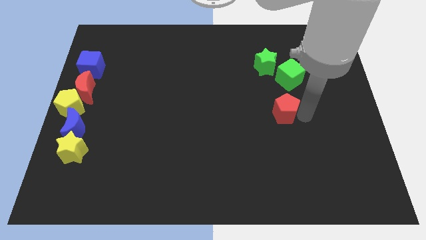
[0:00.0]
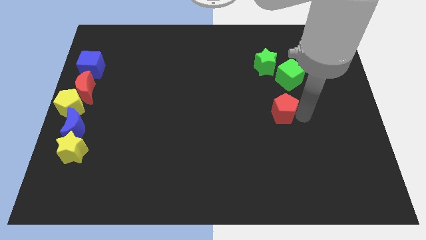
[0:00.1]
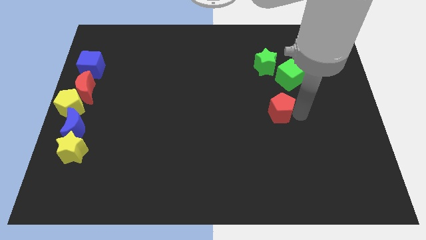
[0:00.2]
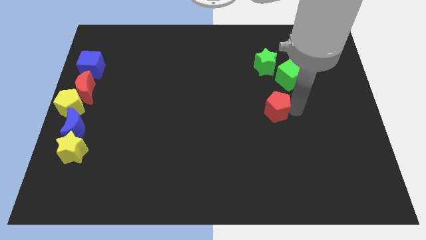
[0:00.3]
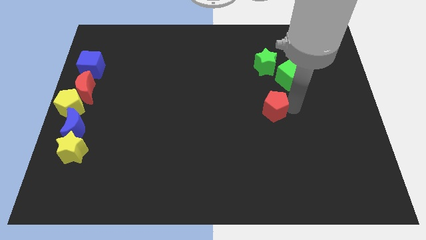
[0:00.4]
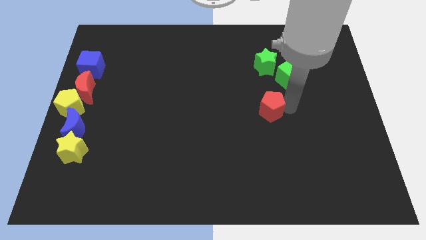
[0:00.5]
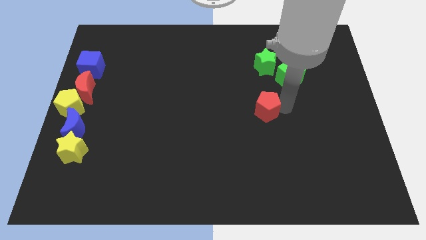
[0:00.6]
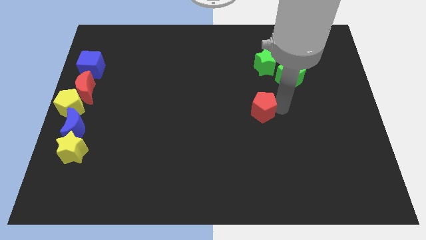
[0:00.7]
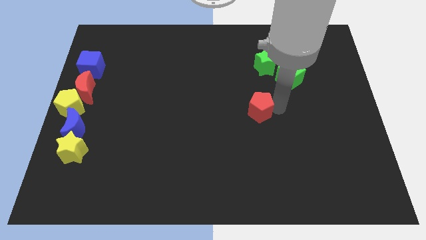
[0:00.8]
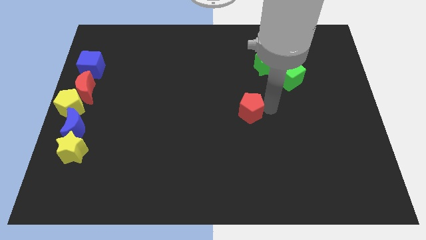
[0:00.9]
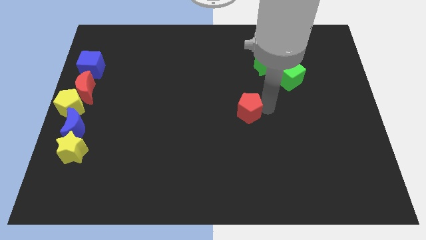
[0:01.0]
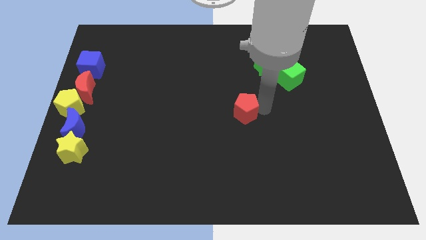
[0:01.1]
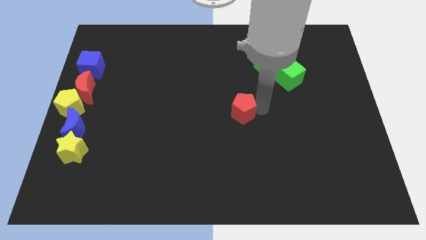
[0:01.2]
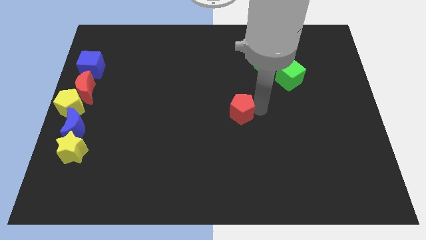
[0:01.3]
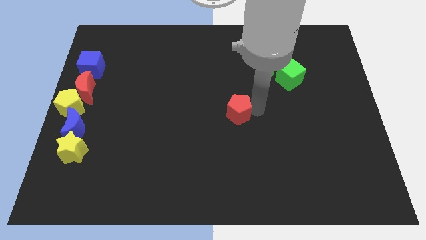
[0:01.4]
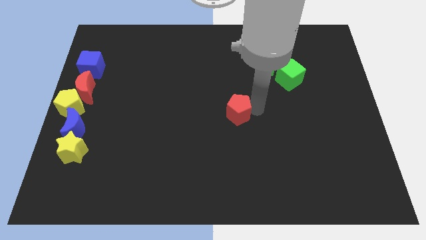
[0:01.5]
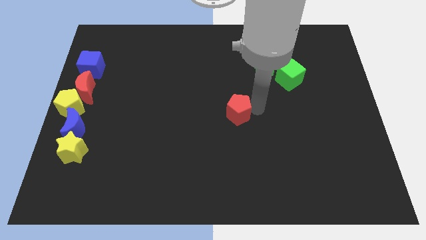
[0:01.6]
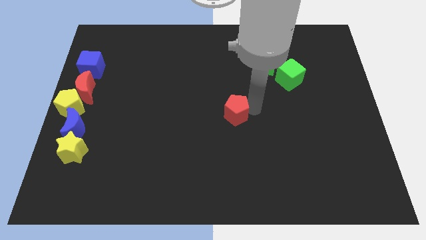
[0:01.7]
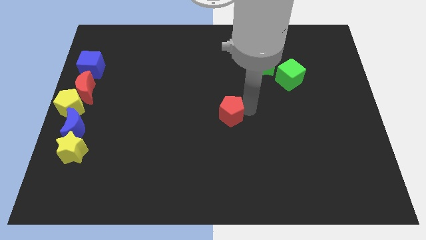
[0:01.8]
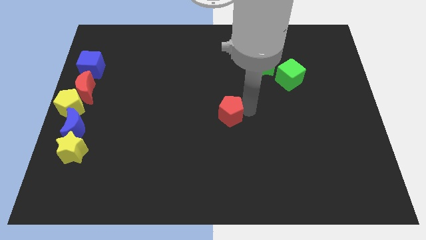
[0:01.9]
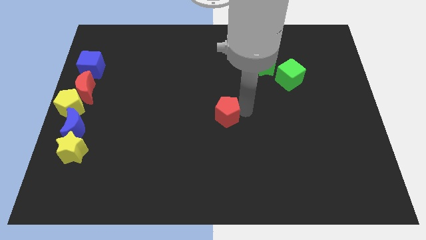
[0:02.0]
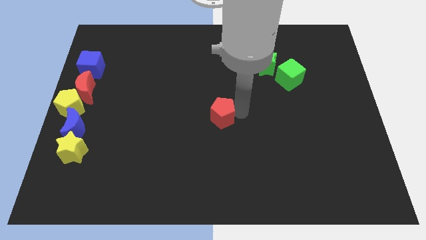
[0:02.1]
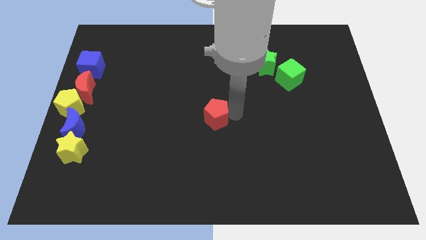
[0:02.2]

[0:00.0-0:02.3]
move the red pentagon to the center of the board

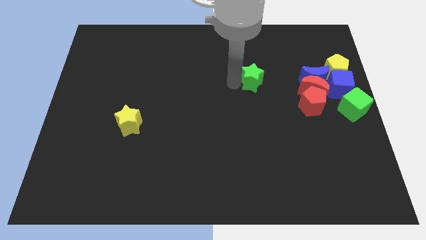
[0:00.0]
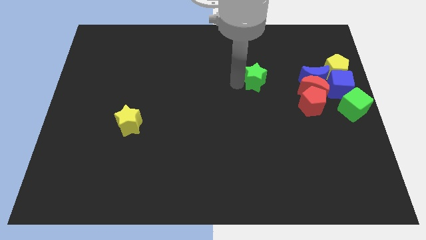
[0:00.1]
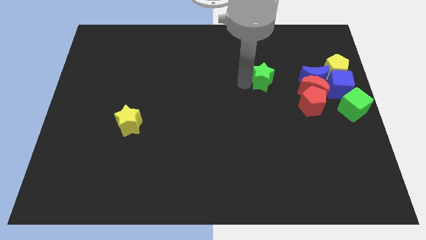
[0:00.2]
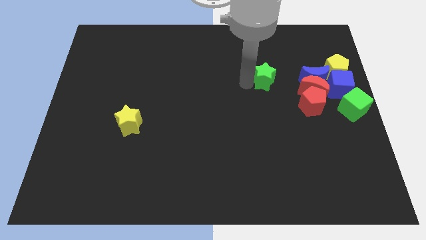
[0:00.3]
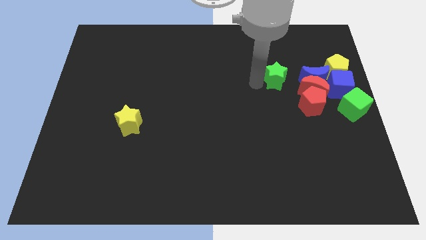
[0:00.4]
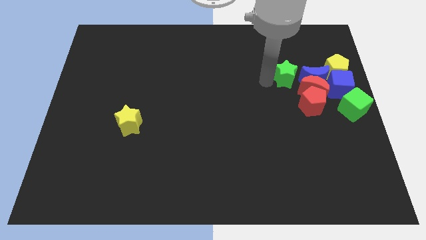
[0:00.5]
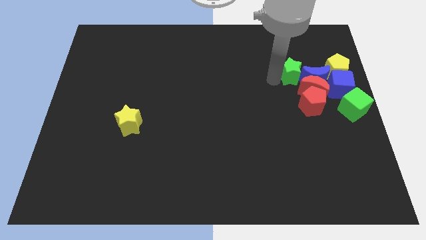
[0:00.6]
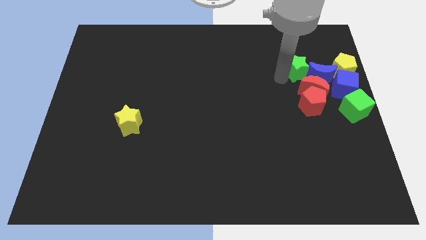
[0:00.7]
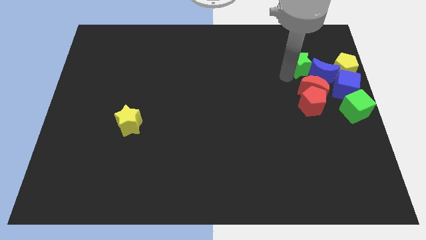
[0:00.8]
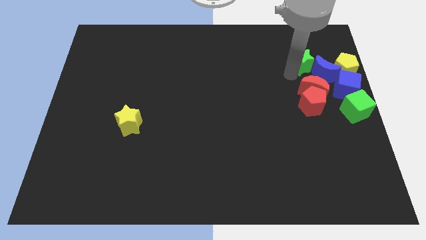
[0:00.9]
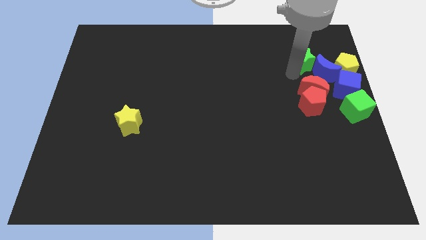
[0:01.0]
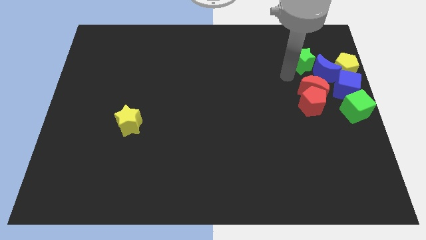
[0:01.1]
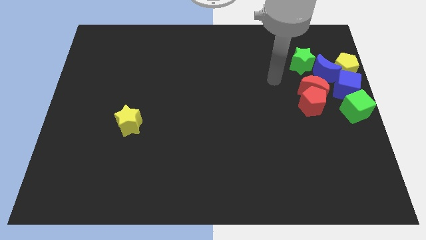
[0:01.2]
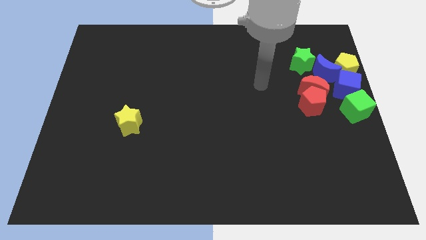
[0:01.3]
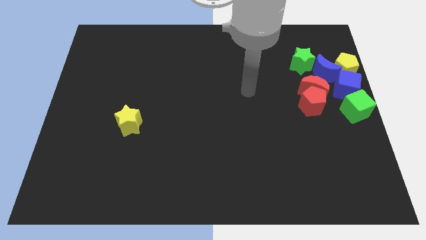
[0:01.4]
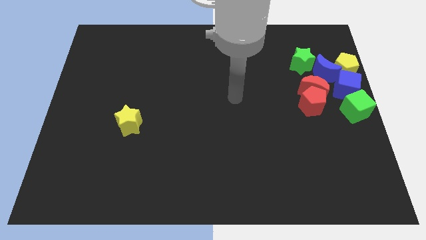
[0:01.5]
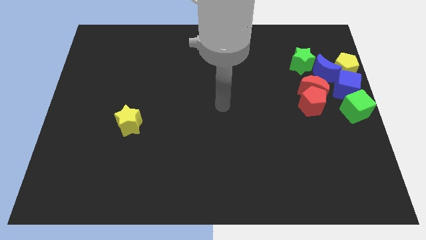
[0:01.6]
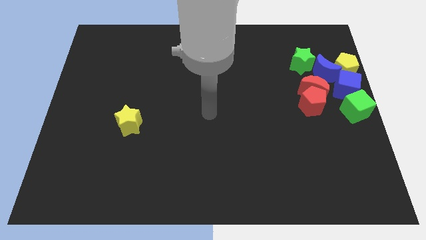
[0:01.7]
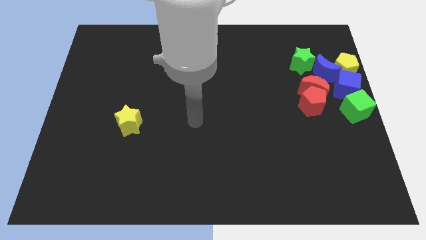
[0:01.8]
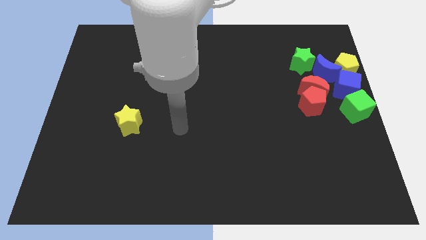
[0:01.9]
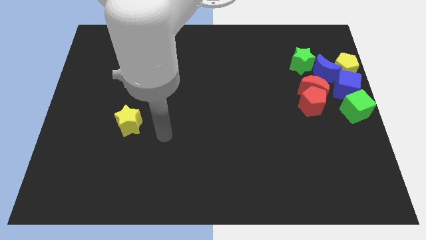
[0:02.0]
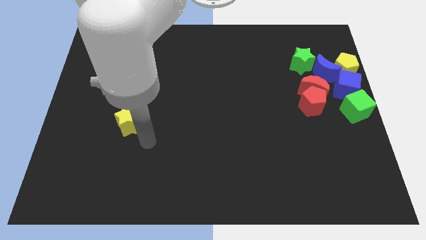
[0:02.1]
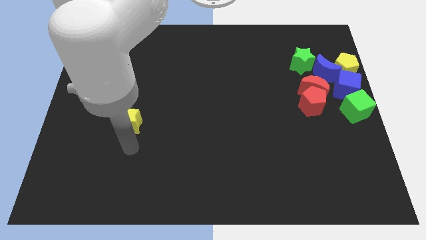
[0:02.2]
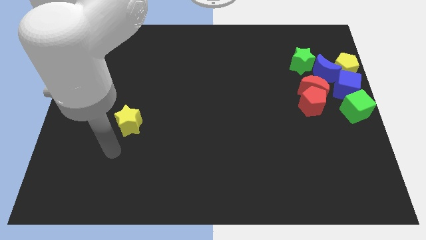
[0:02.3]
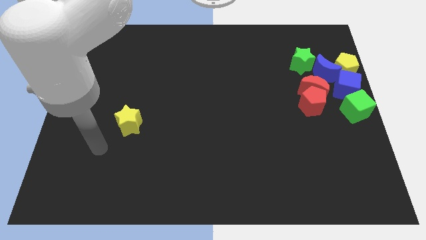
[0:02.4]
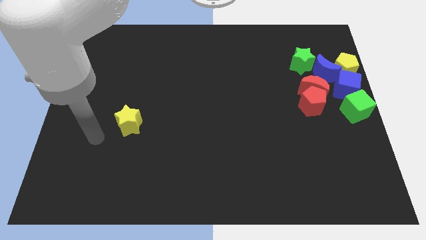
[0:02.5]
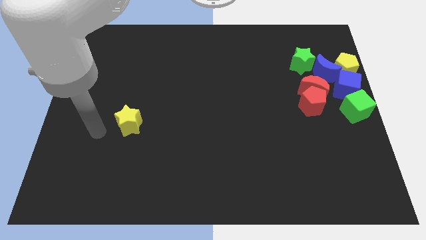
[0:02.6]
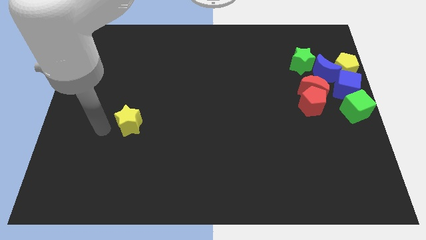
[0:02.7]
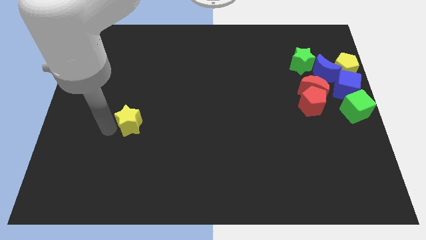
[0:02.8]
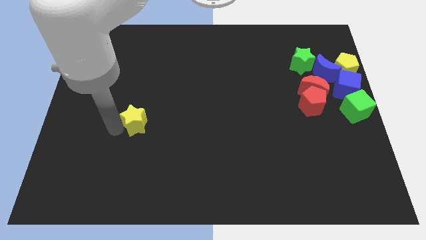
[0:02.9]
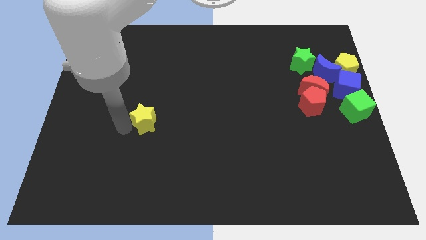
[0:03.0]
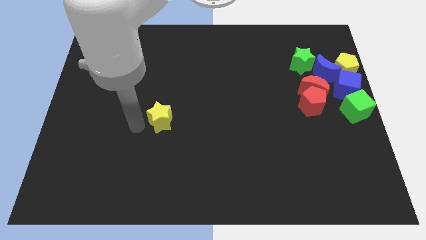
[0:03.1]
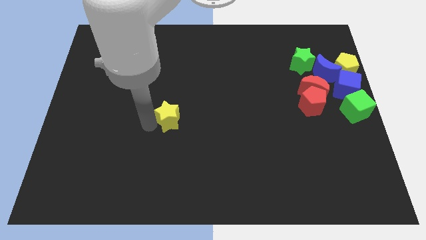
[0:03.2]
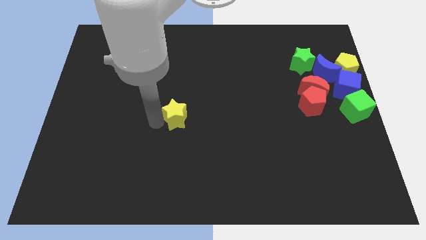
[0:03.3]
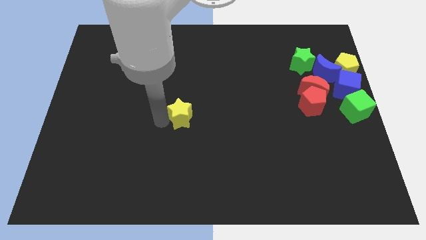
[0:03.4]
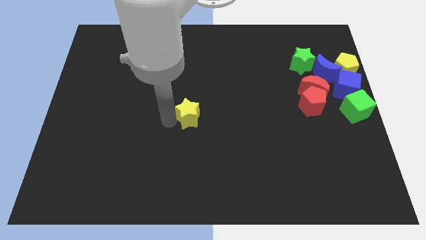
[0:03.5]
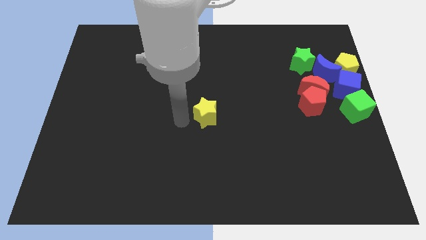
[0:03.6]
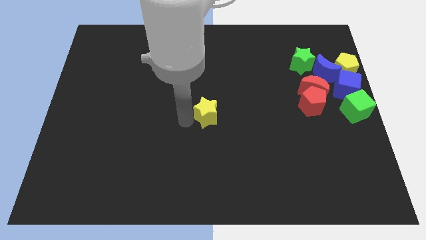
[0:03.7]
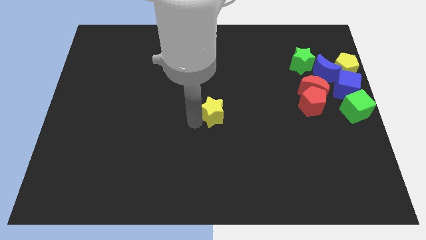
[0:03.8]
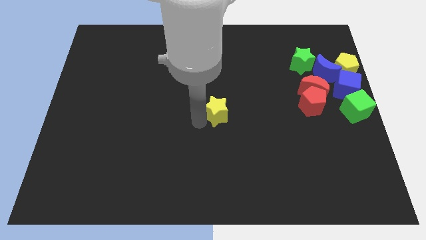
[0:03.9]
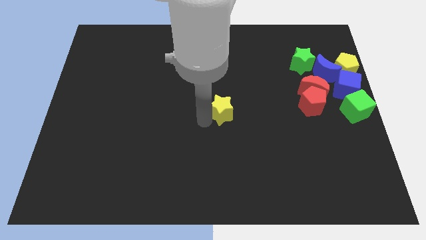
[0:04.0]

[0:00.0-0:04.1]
place yellow star in the center

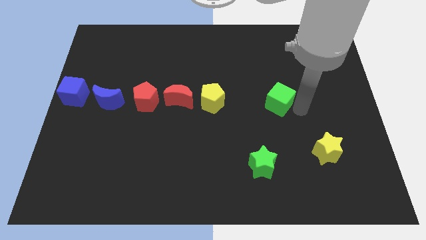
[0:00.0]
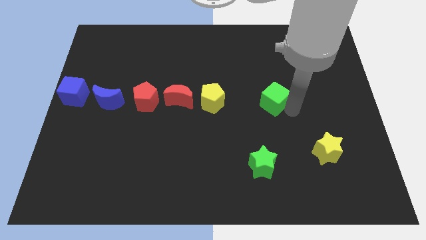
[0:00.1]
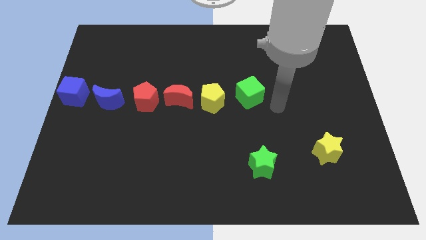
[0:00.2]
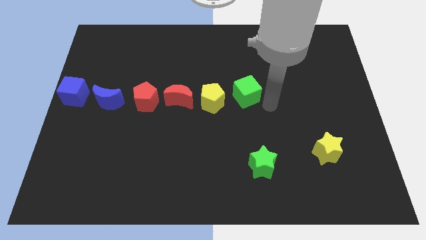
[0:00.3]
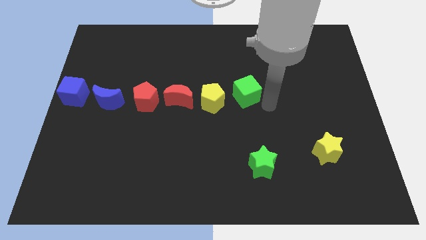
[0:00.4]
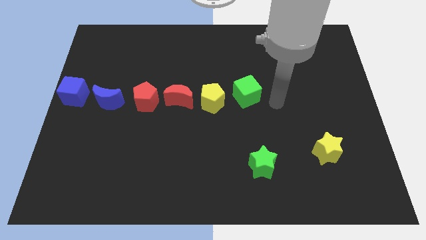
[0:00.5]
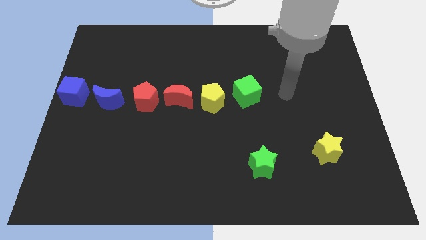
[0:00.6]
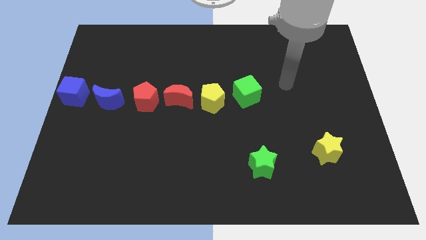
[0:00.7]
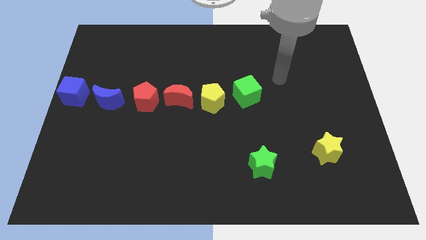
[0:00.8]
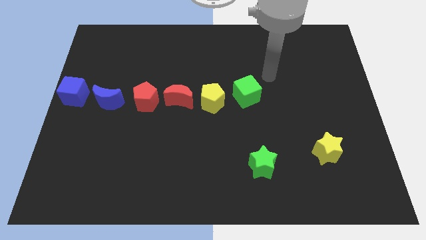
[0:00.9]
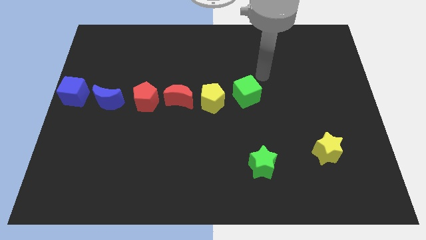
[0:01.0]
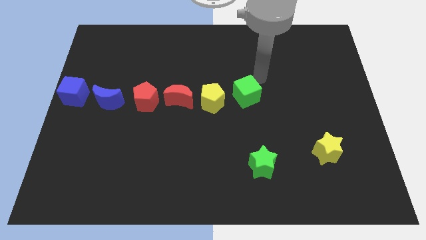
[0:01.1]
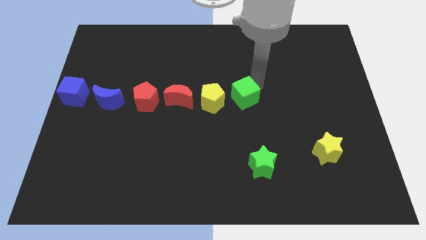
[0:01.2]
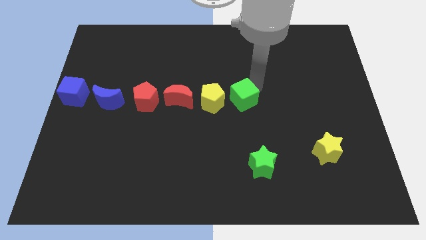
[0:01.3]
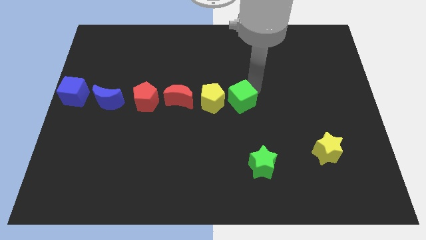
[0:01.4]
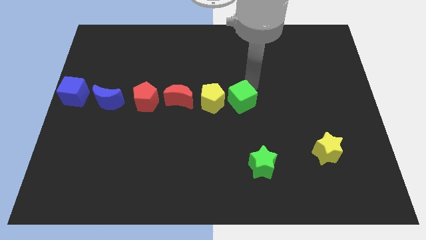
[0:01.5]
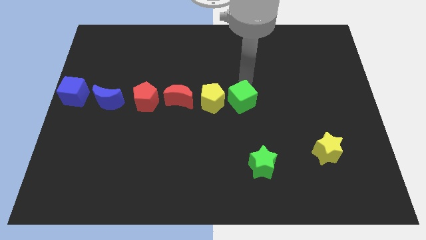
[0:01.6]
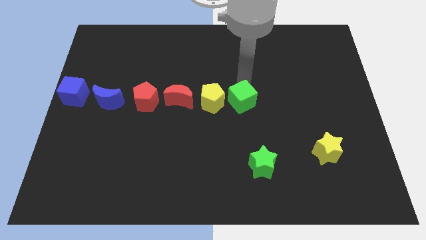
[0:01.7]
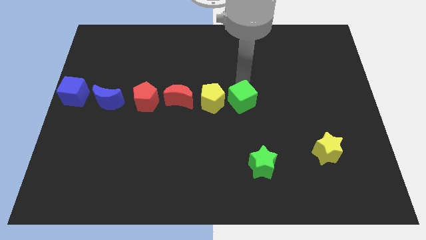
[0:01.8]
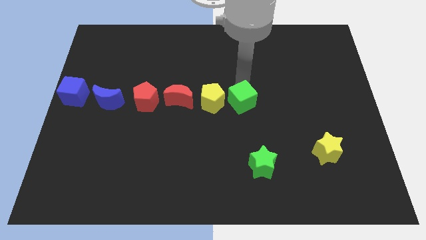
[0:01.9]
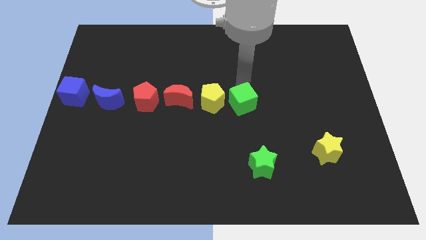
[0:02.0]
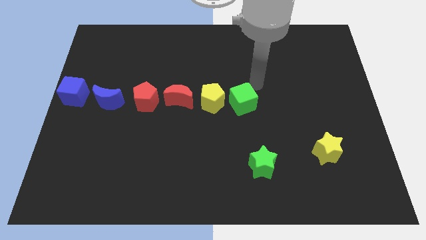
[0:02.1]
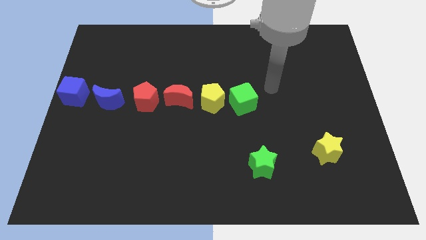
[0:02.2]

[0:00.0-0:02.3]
move the green cube to the right side of the yellow pentagon

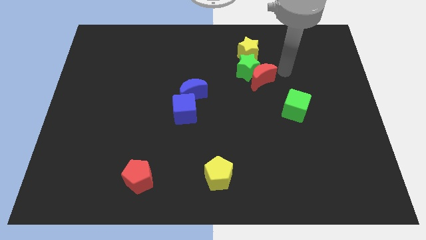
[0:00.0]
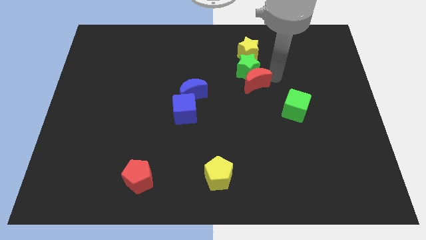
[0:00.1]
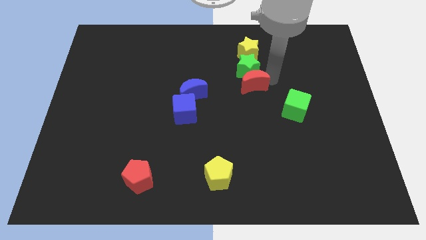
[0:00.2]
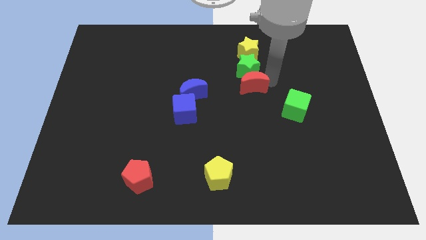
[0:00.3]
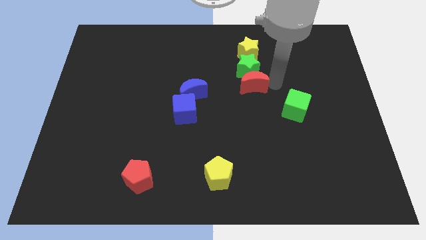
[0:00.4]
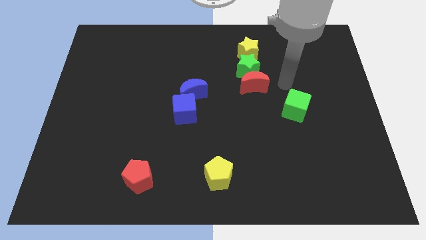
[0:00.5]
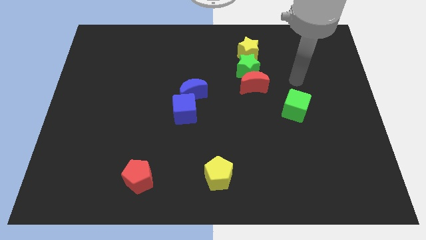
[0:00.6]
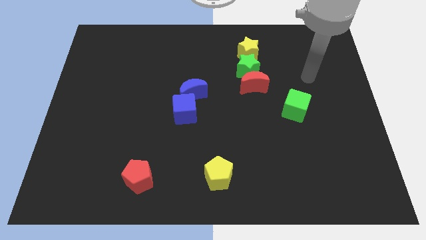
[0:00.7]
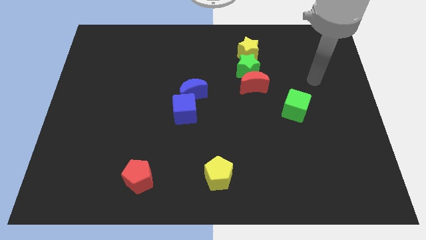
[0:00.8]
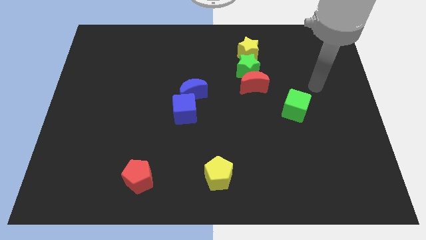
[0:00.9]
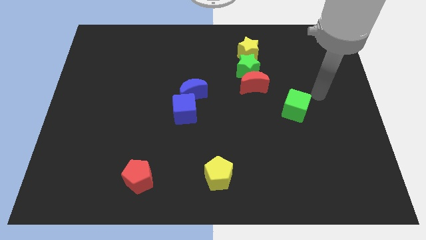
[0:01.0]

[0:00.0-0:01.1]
place the red moon to the bottom of the green star
